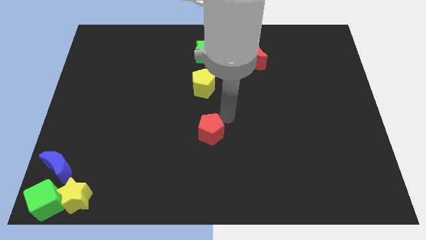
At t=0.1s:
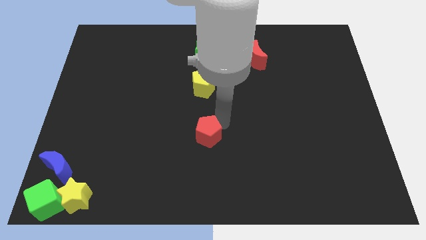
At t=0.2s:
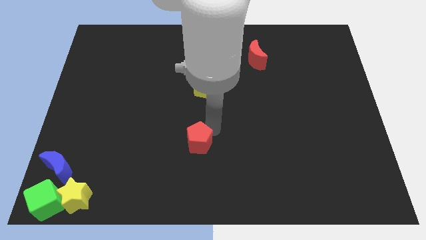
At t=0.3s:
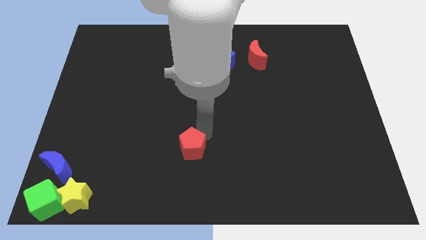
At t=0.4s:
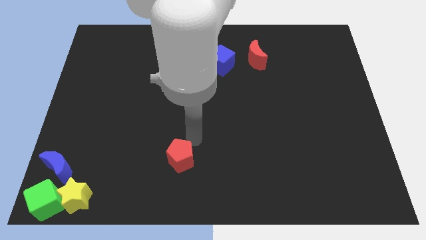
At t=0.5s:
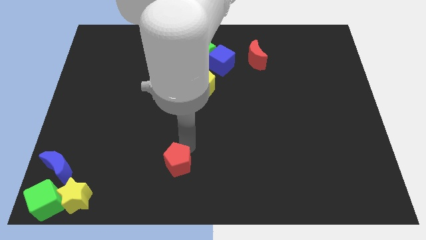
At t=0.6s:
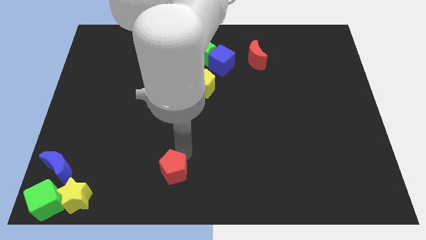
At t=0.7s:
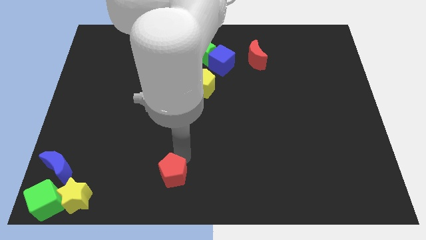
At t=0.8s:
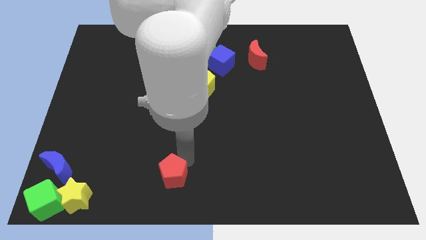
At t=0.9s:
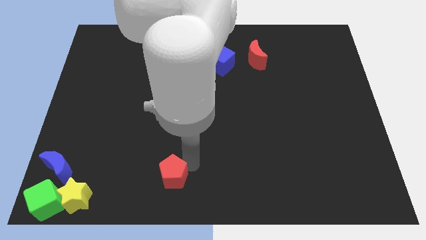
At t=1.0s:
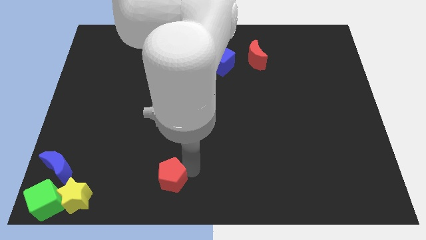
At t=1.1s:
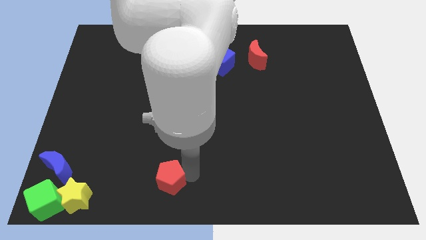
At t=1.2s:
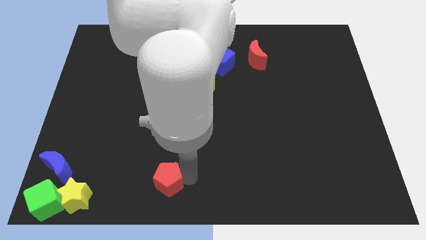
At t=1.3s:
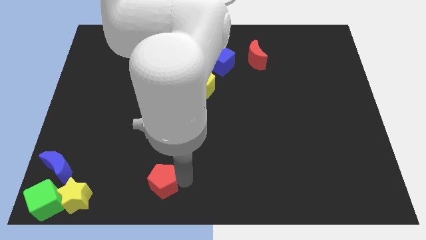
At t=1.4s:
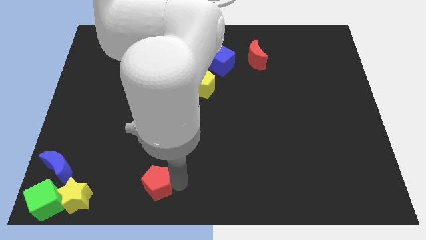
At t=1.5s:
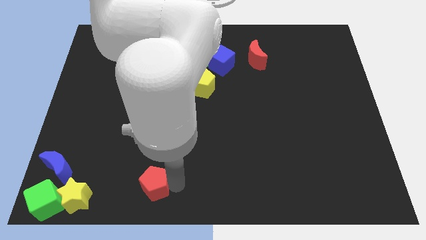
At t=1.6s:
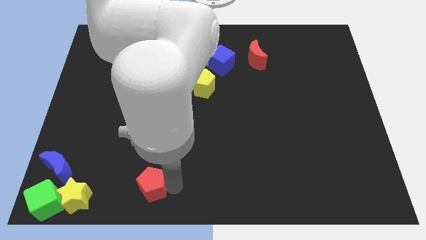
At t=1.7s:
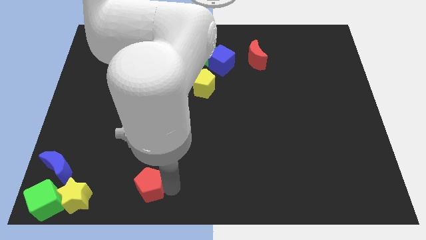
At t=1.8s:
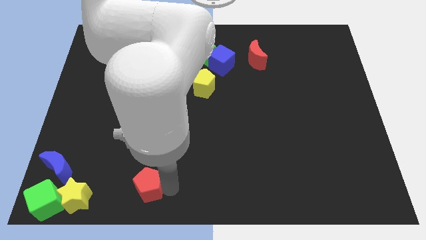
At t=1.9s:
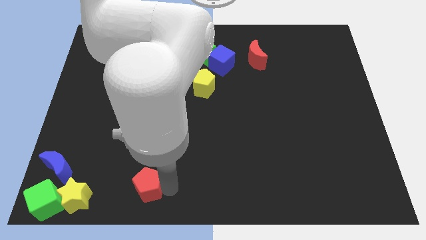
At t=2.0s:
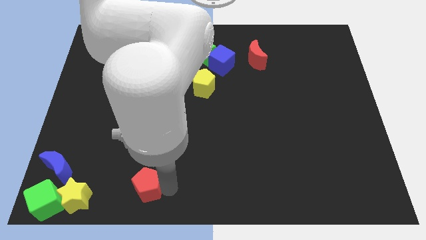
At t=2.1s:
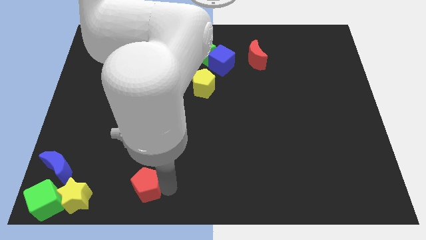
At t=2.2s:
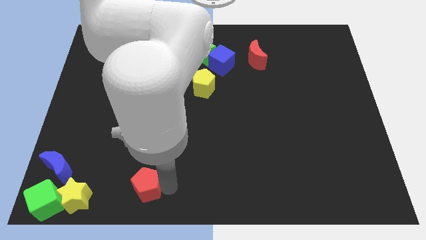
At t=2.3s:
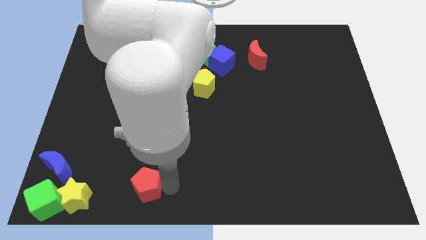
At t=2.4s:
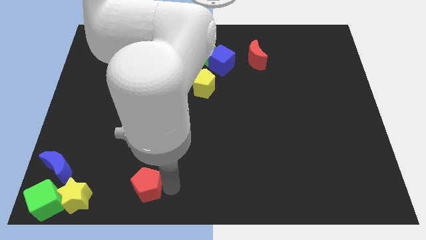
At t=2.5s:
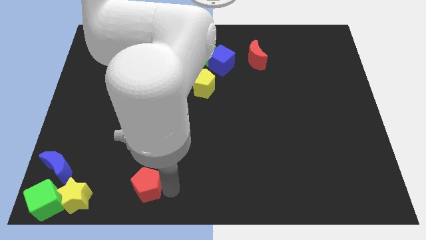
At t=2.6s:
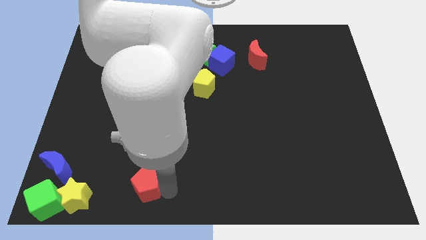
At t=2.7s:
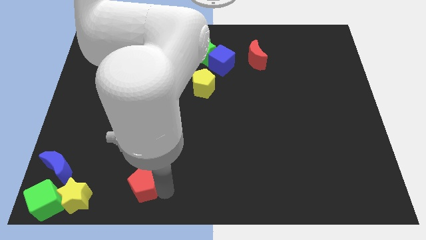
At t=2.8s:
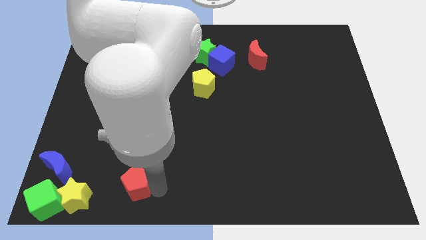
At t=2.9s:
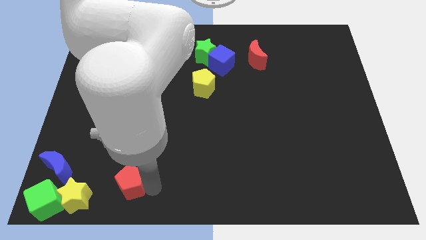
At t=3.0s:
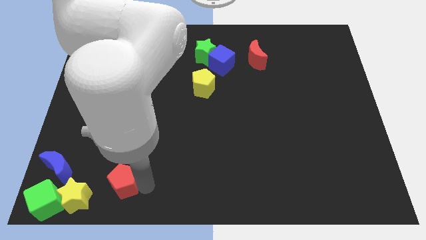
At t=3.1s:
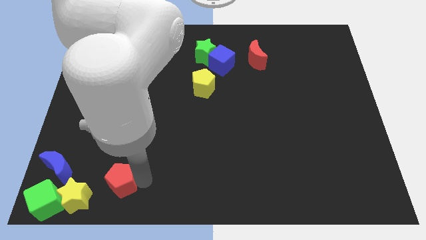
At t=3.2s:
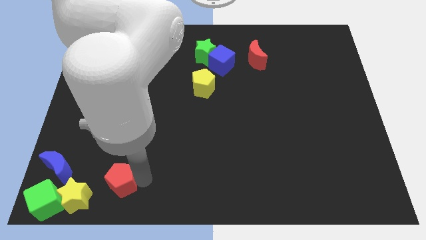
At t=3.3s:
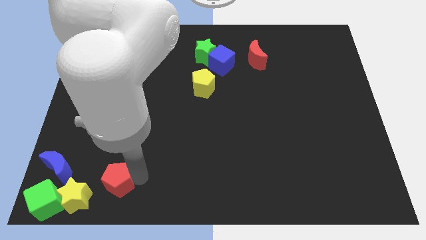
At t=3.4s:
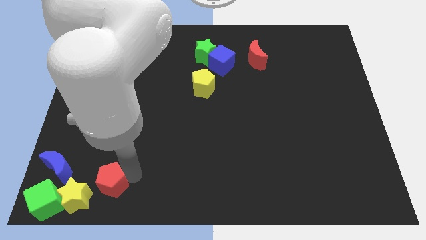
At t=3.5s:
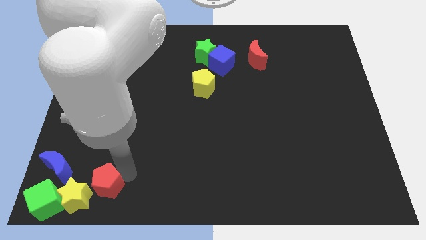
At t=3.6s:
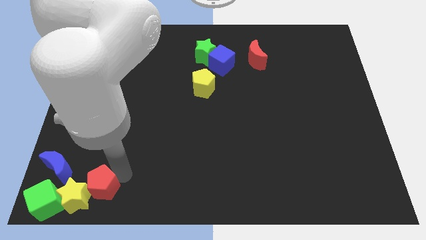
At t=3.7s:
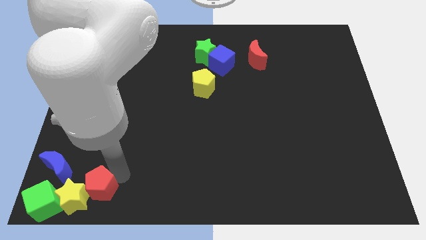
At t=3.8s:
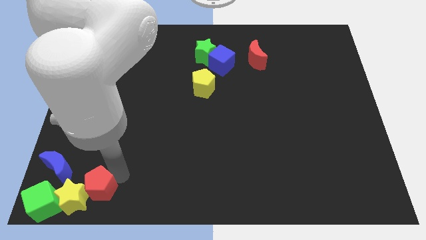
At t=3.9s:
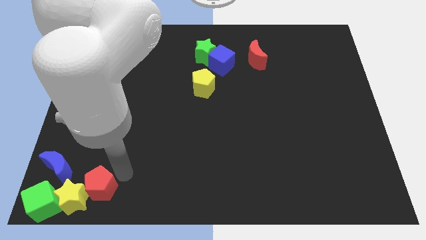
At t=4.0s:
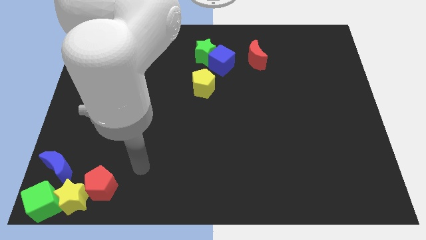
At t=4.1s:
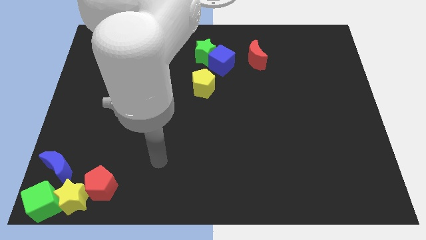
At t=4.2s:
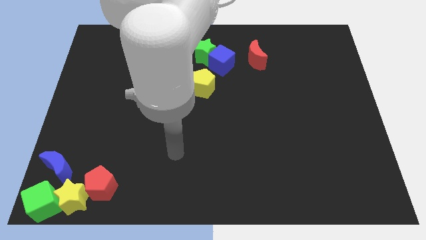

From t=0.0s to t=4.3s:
slide the red pentagon to the bottom left of the board

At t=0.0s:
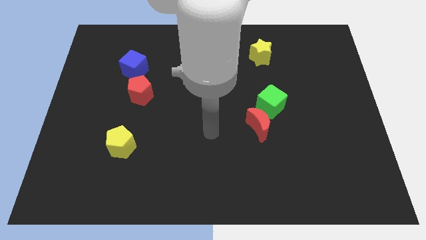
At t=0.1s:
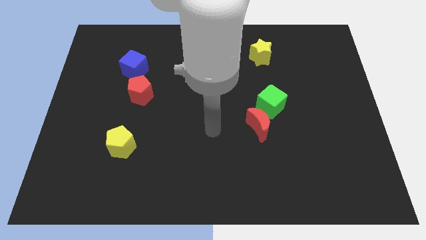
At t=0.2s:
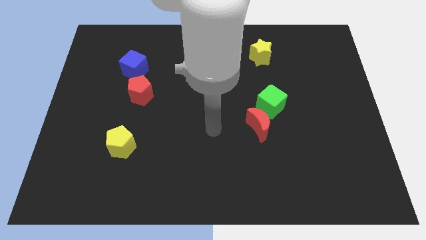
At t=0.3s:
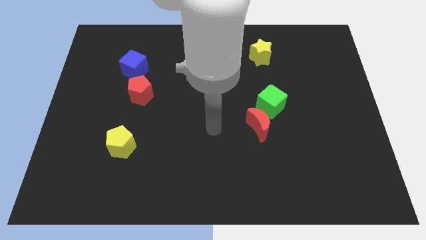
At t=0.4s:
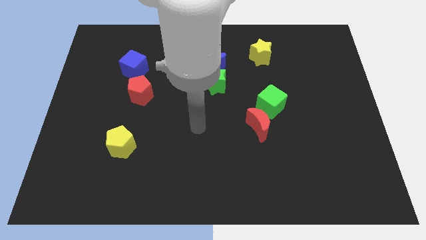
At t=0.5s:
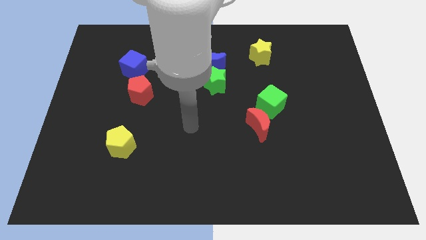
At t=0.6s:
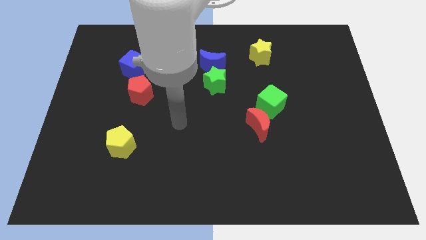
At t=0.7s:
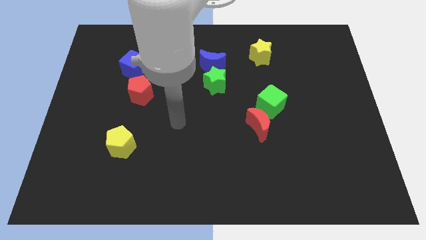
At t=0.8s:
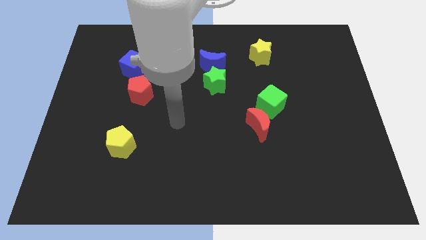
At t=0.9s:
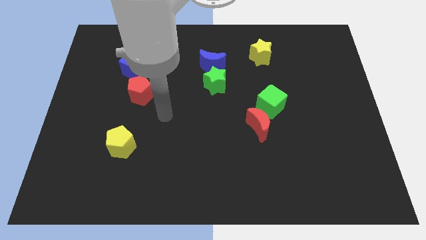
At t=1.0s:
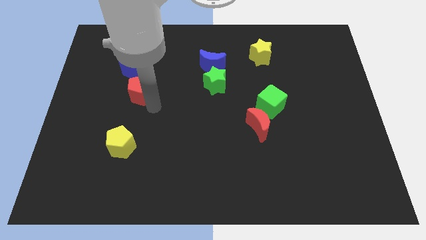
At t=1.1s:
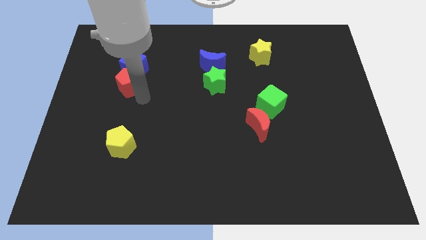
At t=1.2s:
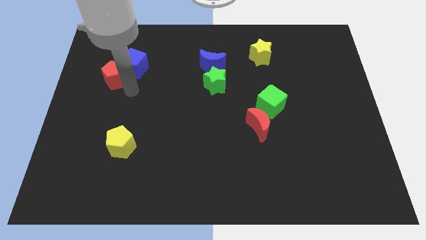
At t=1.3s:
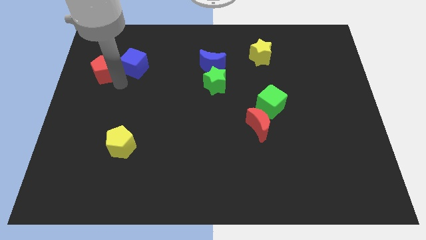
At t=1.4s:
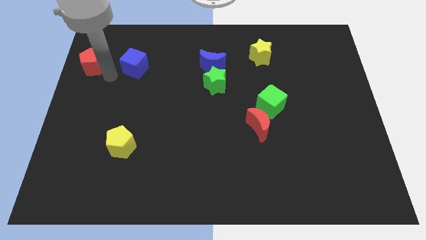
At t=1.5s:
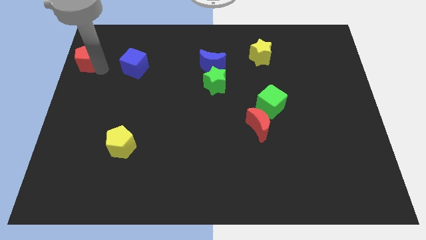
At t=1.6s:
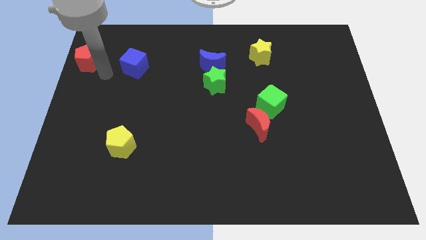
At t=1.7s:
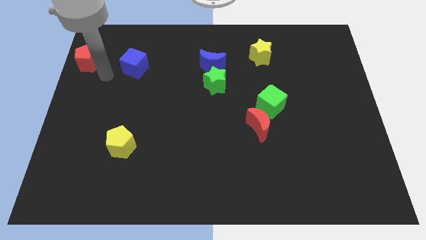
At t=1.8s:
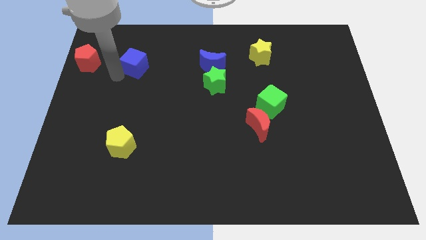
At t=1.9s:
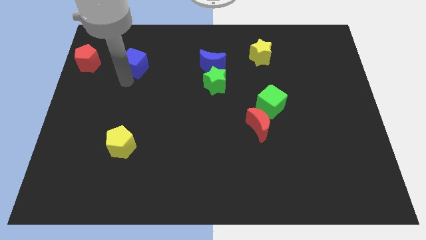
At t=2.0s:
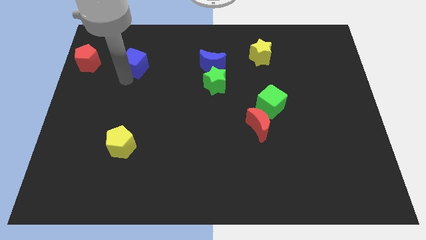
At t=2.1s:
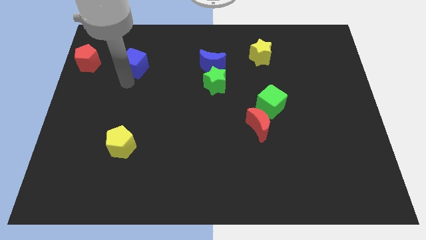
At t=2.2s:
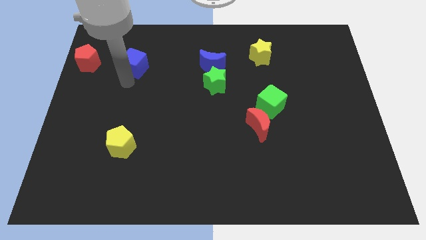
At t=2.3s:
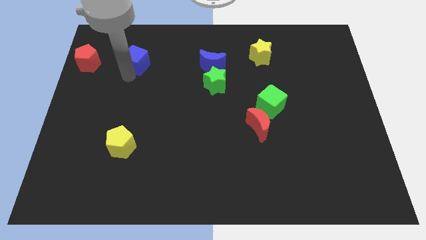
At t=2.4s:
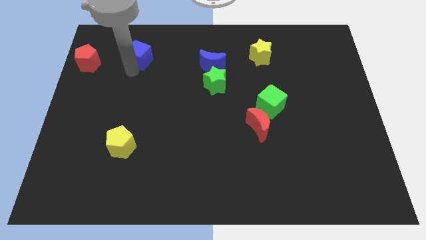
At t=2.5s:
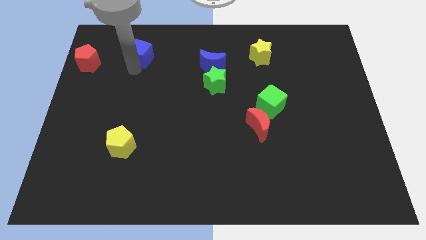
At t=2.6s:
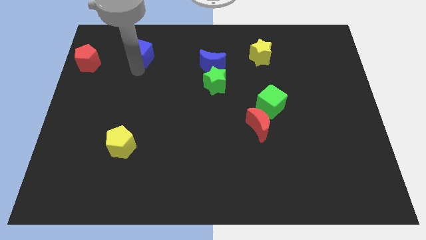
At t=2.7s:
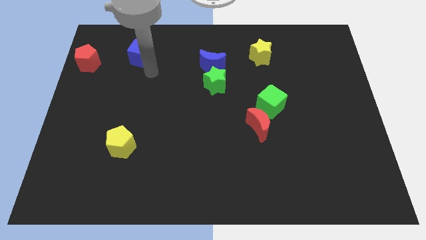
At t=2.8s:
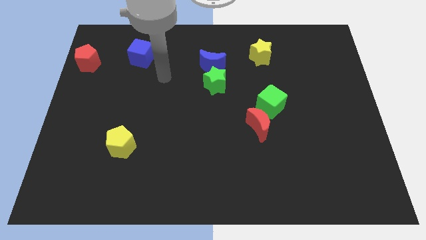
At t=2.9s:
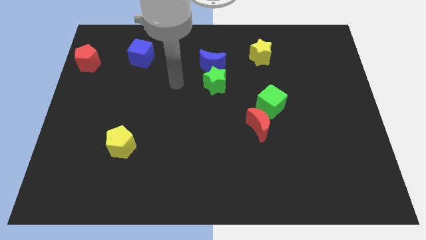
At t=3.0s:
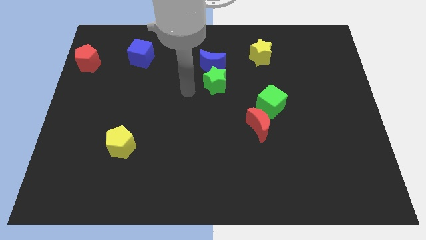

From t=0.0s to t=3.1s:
separate the red pentagon and blue cube

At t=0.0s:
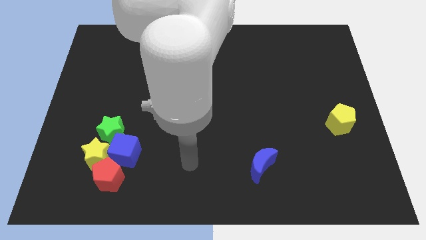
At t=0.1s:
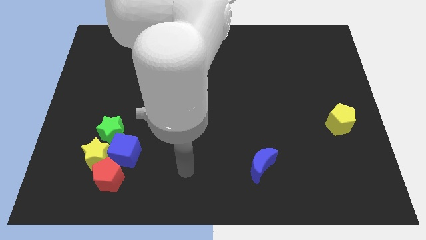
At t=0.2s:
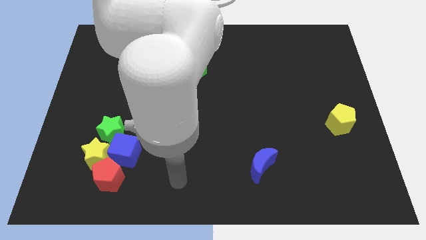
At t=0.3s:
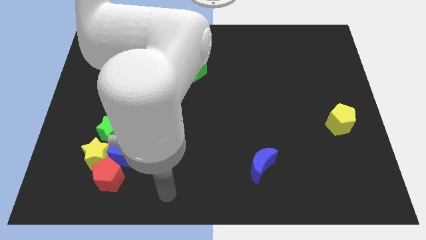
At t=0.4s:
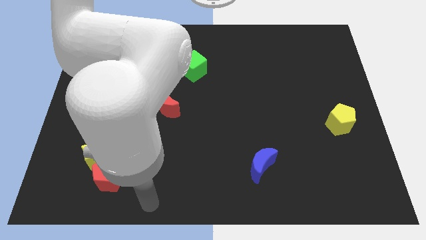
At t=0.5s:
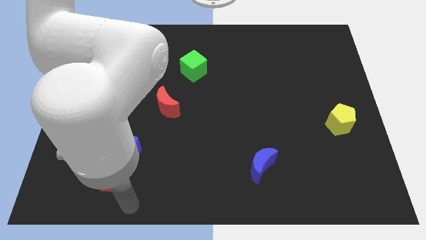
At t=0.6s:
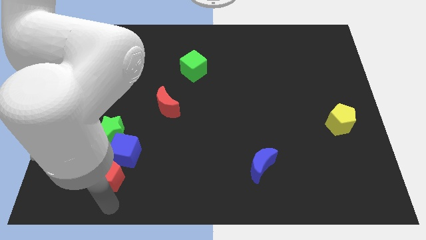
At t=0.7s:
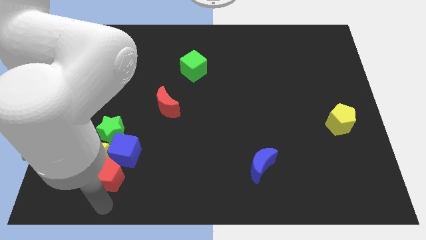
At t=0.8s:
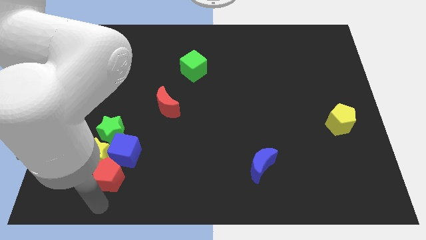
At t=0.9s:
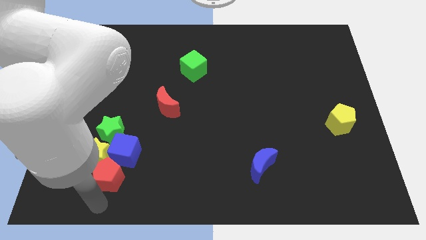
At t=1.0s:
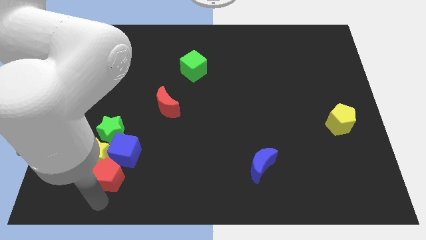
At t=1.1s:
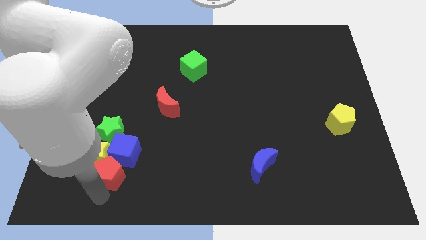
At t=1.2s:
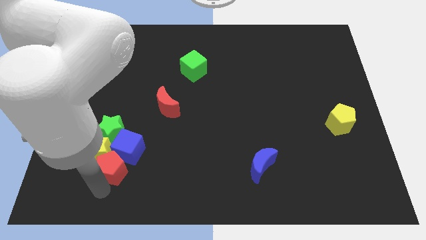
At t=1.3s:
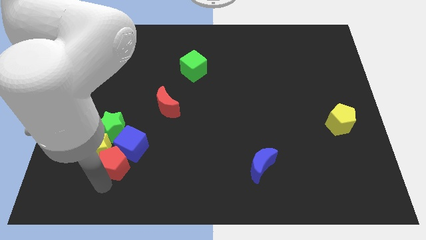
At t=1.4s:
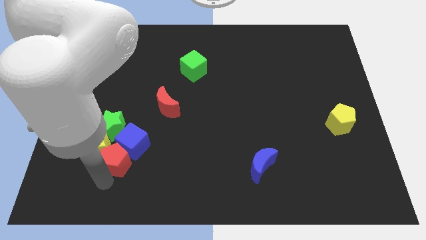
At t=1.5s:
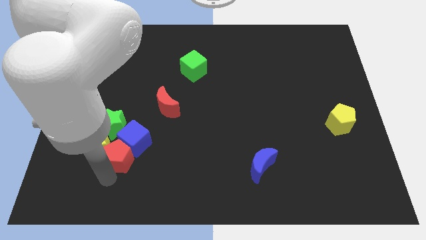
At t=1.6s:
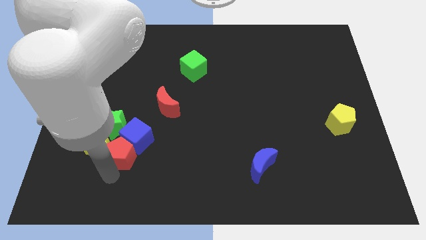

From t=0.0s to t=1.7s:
move the red pentagon below the blue cube
